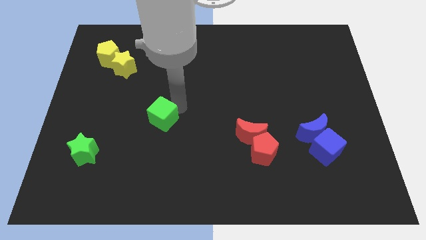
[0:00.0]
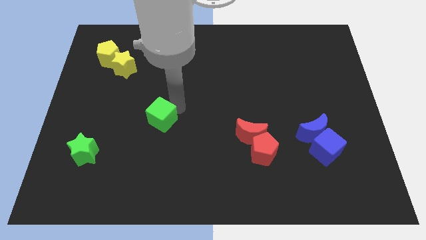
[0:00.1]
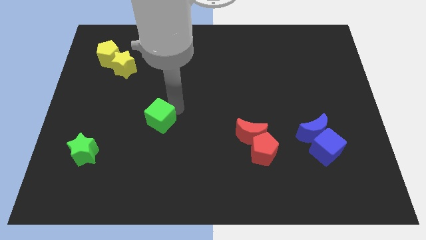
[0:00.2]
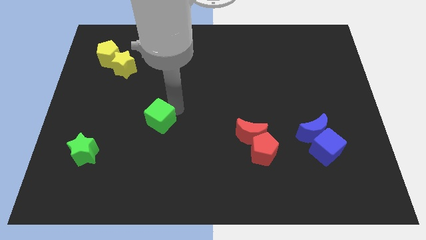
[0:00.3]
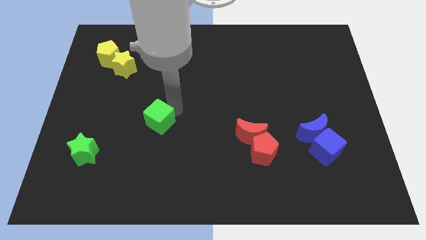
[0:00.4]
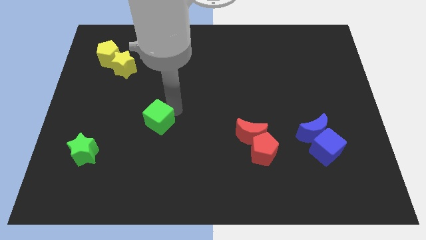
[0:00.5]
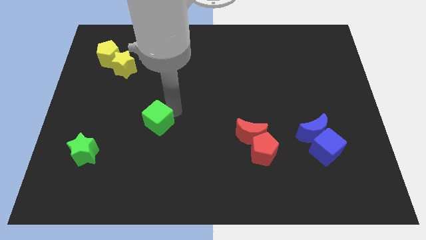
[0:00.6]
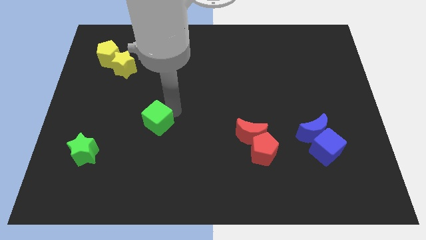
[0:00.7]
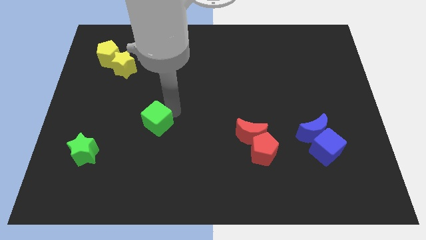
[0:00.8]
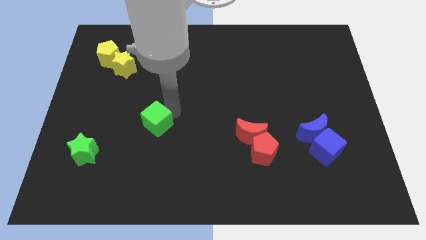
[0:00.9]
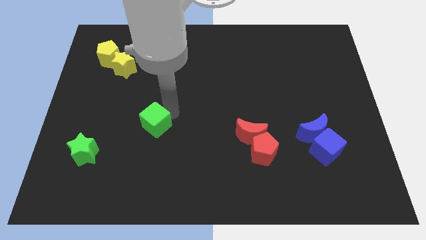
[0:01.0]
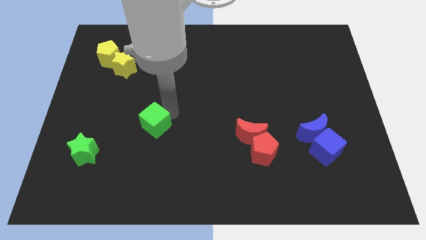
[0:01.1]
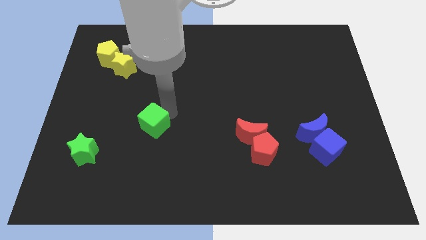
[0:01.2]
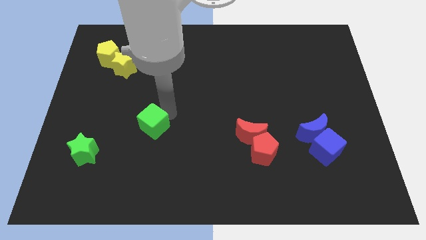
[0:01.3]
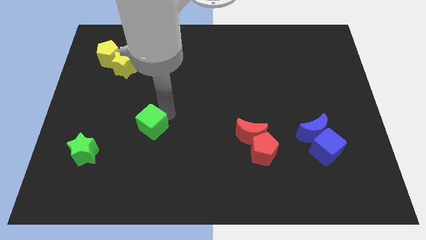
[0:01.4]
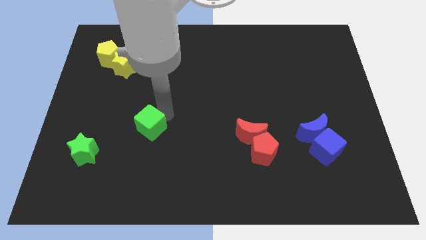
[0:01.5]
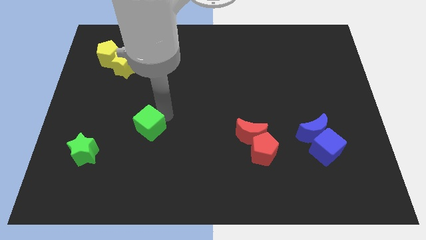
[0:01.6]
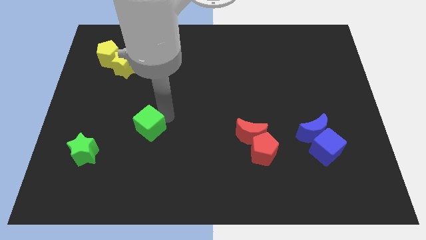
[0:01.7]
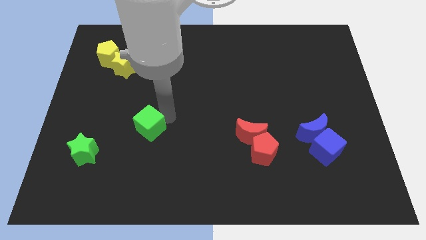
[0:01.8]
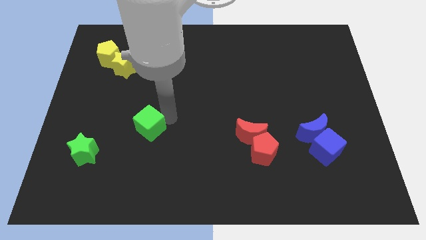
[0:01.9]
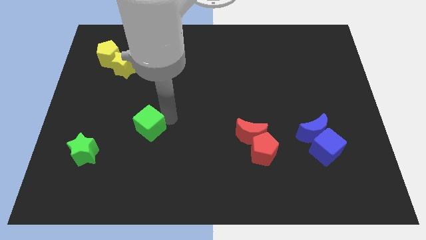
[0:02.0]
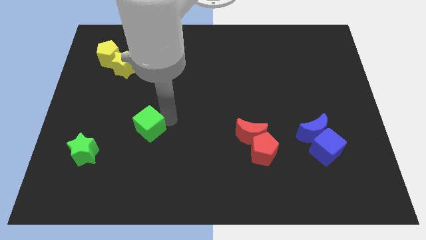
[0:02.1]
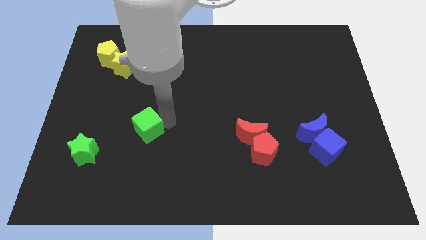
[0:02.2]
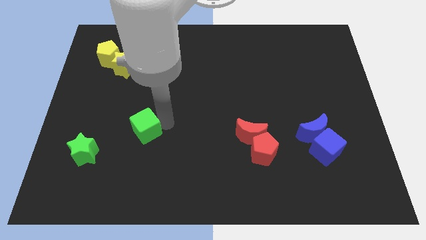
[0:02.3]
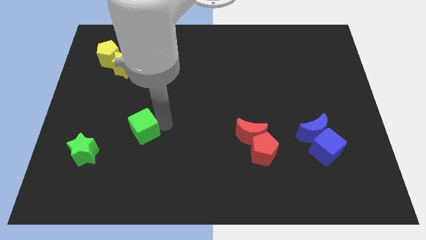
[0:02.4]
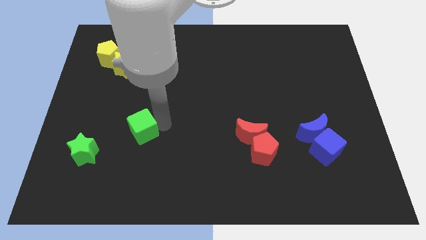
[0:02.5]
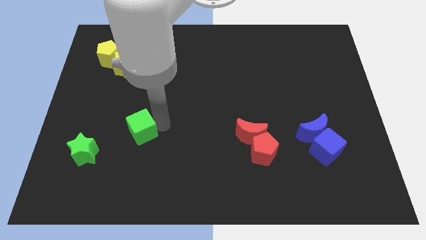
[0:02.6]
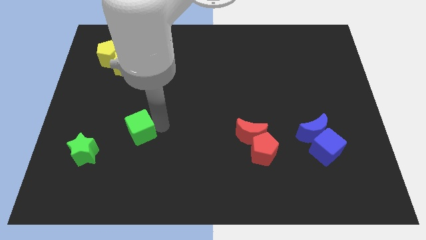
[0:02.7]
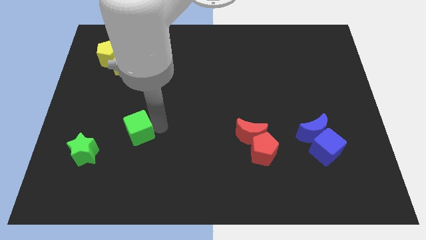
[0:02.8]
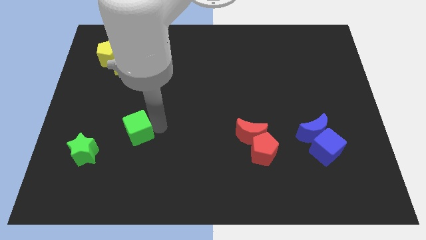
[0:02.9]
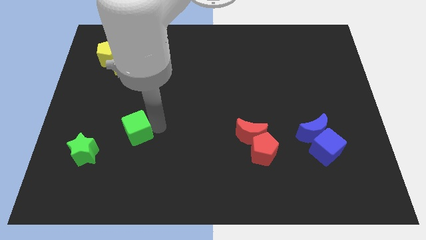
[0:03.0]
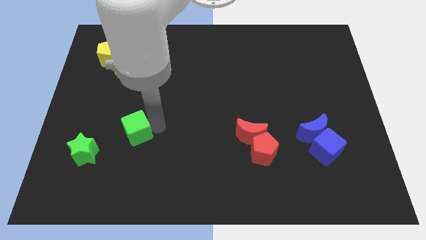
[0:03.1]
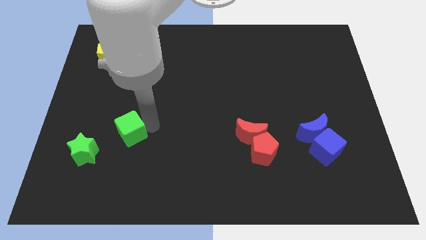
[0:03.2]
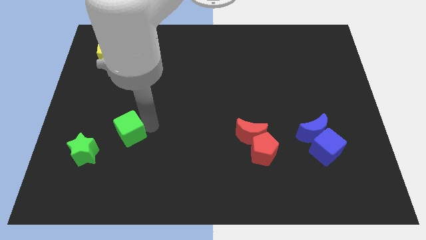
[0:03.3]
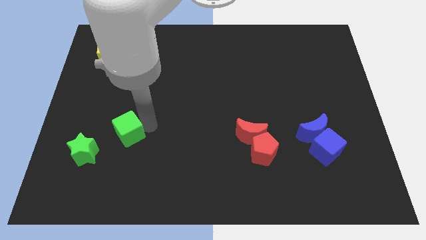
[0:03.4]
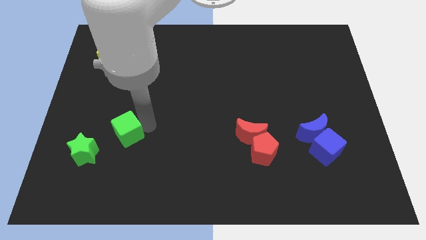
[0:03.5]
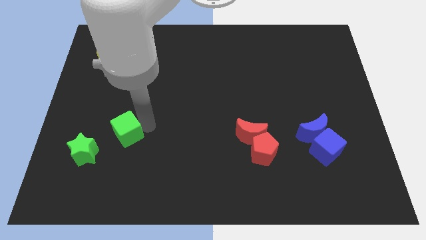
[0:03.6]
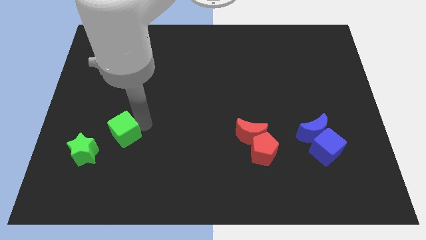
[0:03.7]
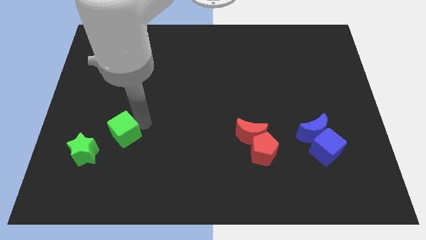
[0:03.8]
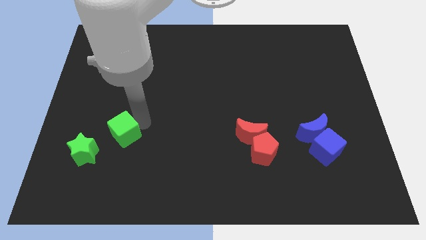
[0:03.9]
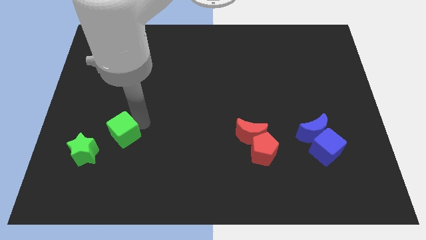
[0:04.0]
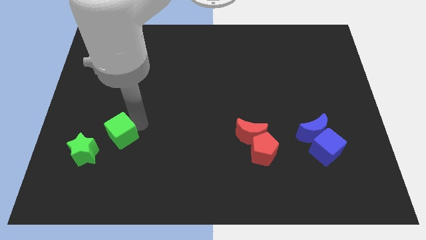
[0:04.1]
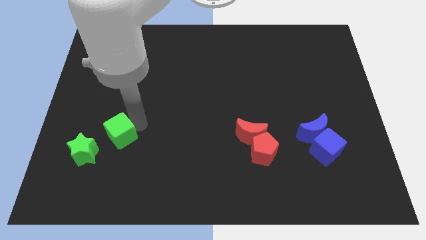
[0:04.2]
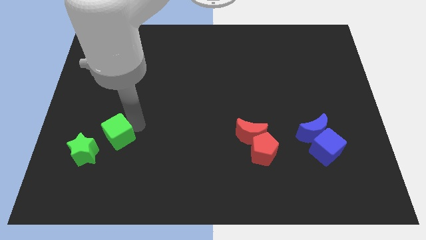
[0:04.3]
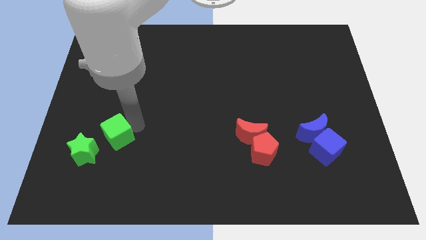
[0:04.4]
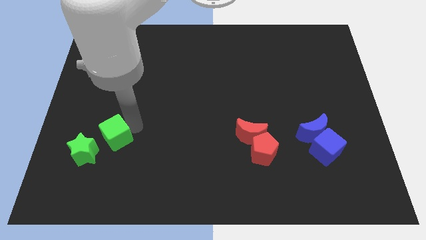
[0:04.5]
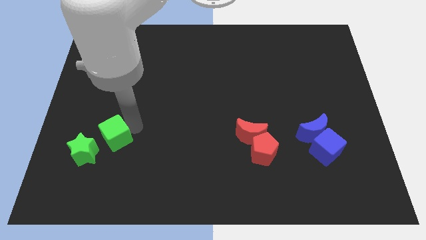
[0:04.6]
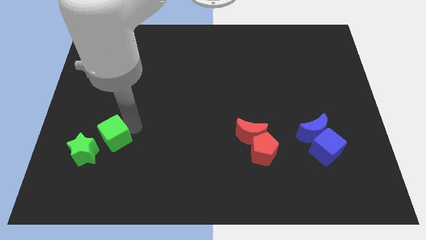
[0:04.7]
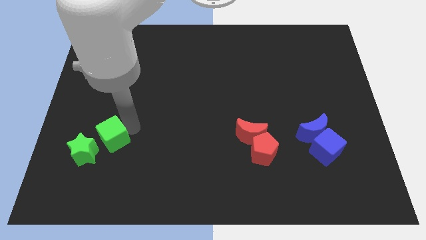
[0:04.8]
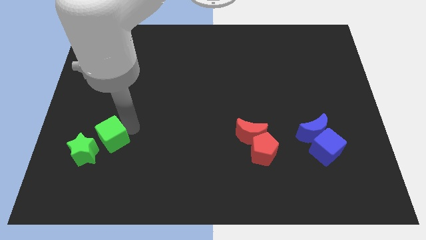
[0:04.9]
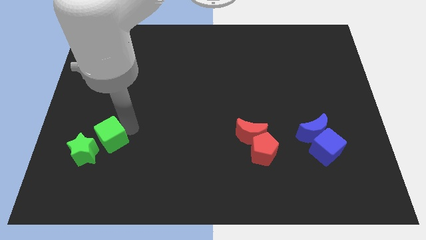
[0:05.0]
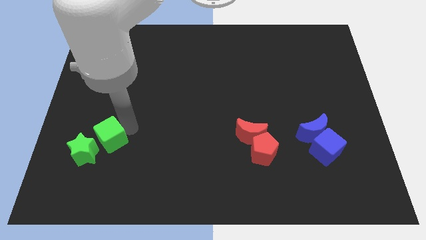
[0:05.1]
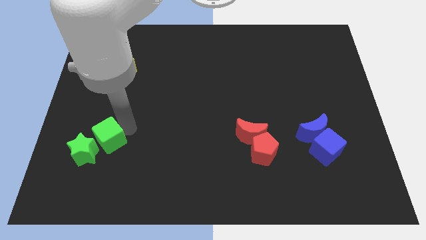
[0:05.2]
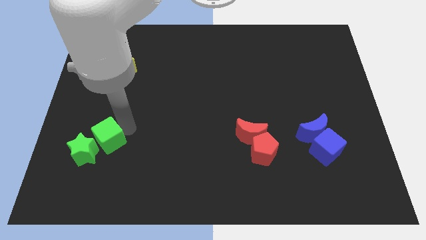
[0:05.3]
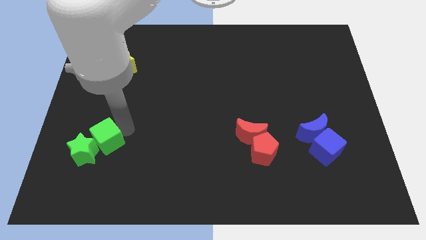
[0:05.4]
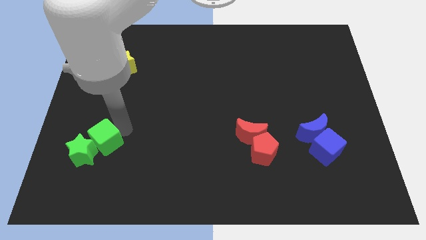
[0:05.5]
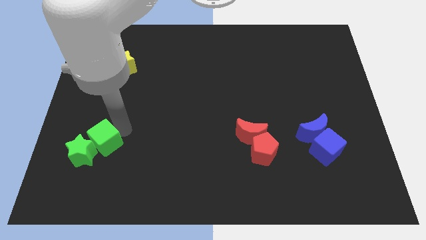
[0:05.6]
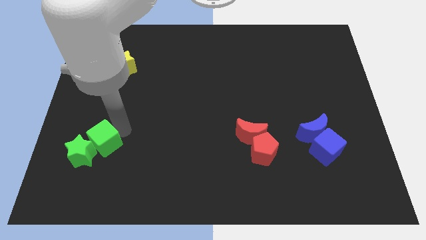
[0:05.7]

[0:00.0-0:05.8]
place the green cube vertically below the yellow star

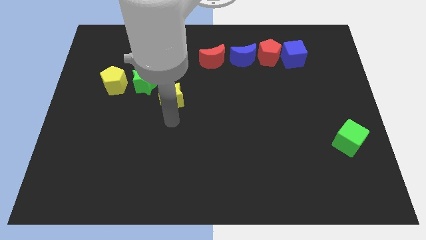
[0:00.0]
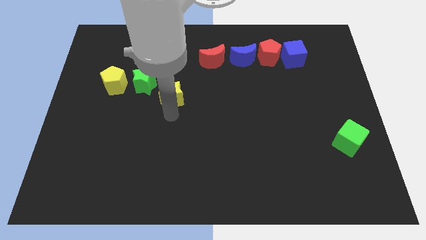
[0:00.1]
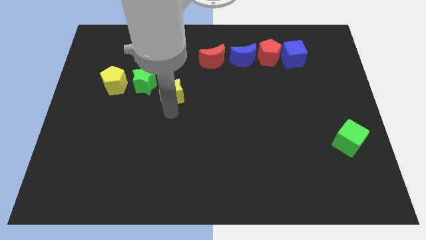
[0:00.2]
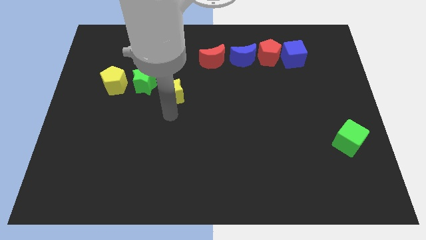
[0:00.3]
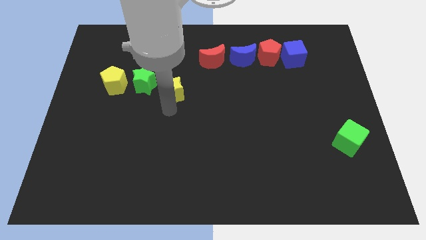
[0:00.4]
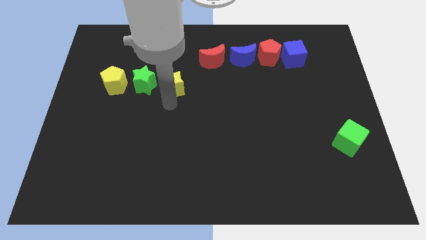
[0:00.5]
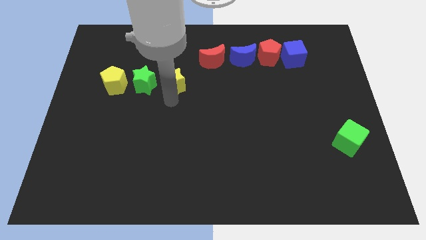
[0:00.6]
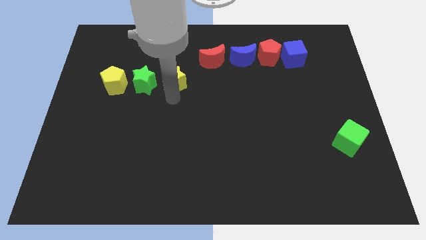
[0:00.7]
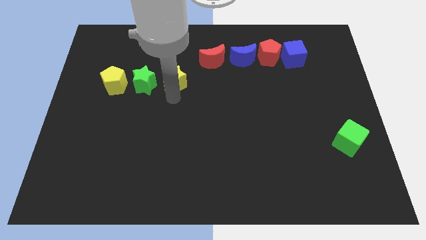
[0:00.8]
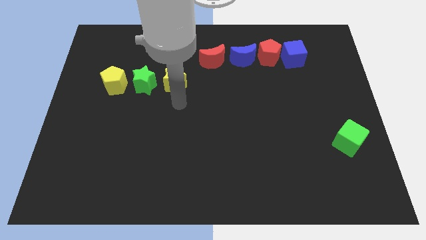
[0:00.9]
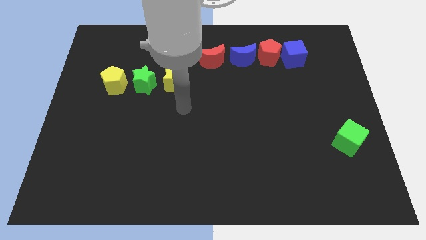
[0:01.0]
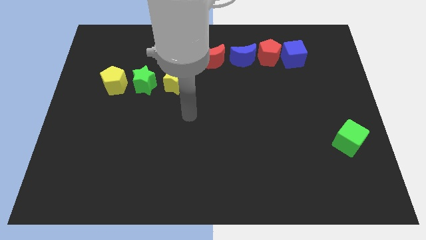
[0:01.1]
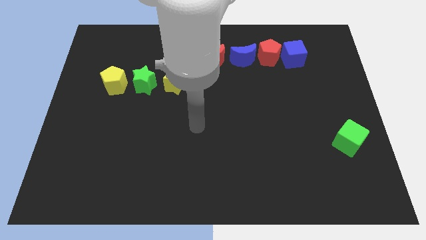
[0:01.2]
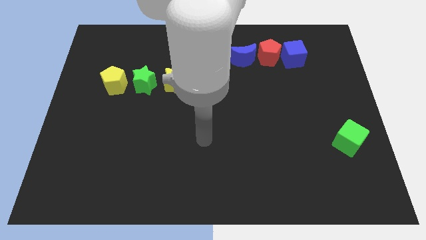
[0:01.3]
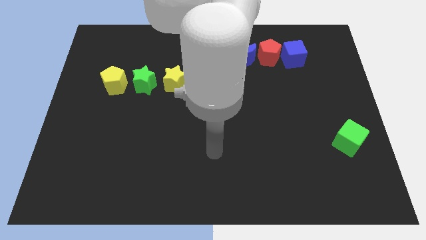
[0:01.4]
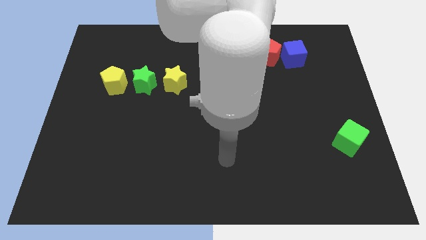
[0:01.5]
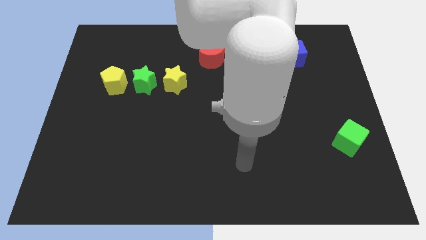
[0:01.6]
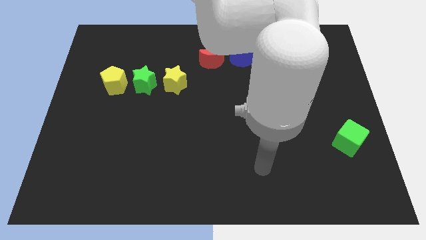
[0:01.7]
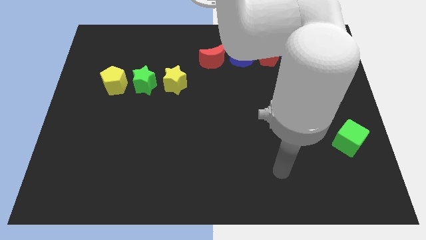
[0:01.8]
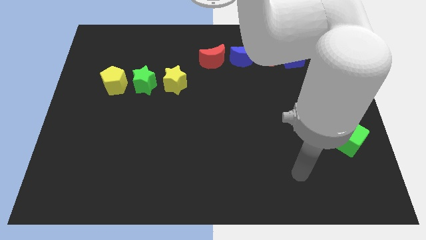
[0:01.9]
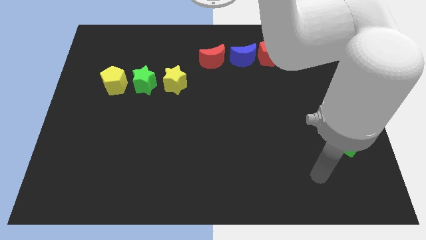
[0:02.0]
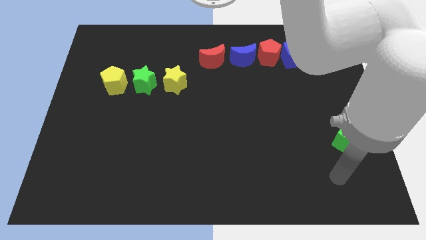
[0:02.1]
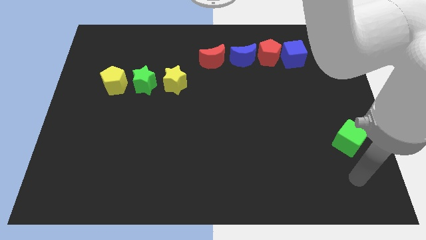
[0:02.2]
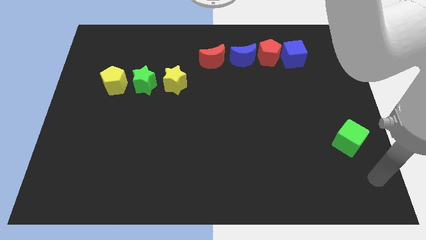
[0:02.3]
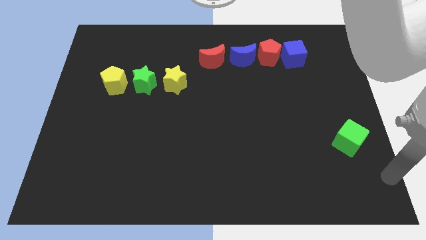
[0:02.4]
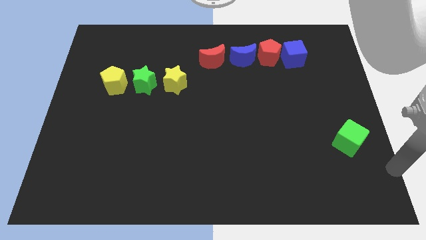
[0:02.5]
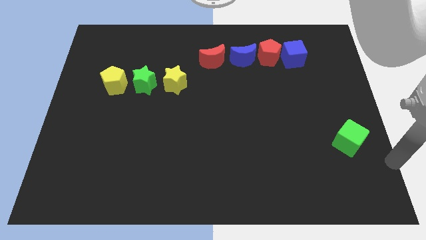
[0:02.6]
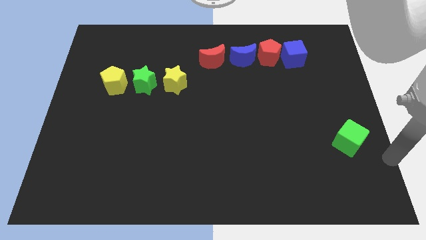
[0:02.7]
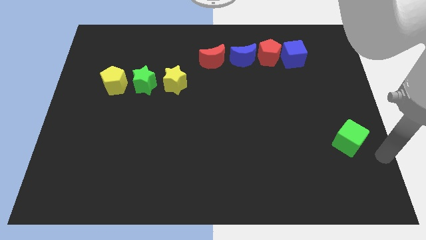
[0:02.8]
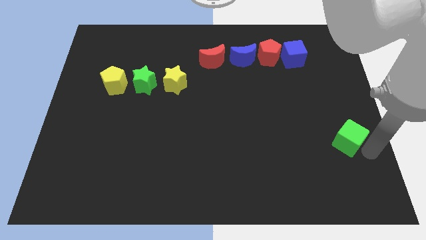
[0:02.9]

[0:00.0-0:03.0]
place the yellow star to the right of the green star
